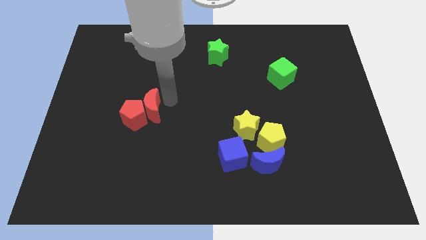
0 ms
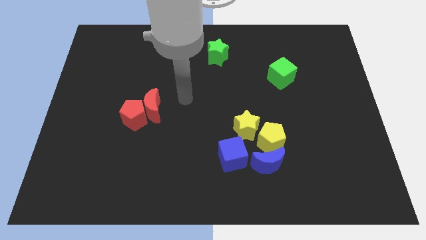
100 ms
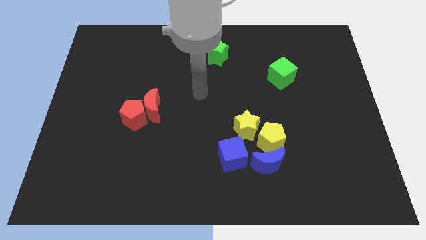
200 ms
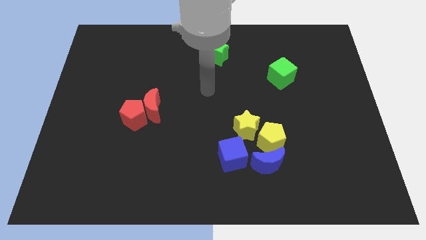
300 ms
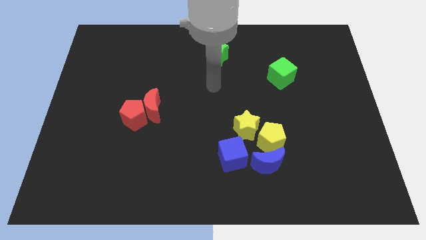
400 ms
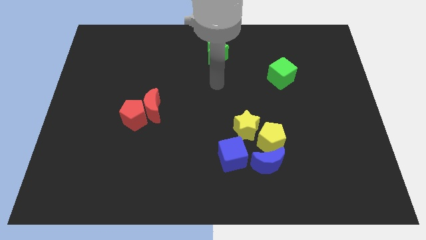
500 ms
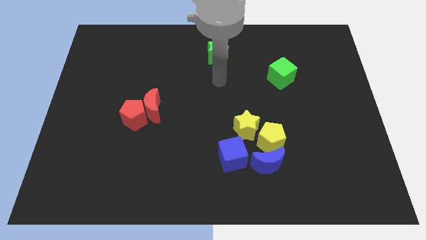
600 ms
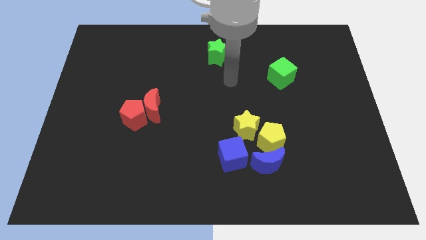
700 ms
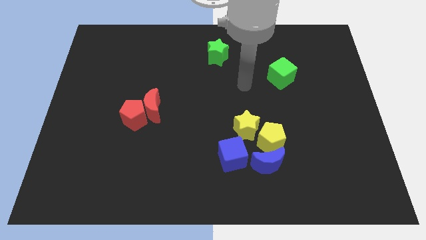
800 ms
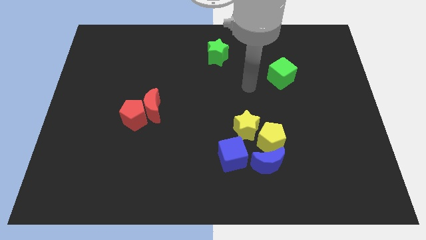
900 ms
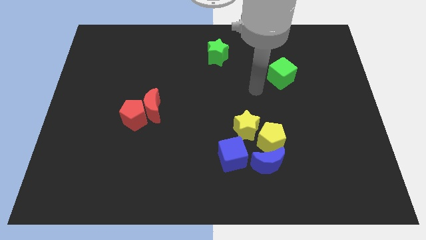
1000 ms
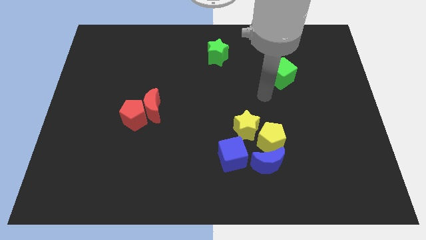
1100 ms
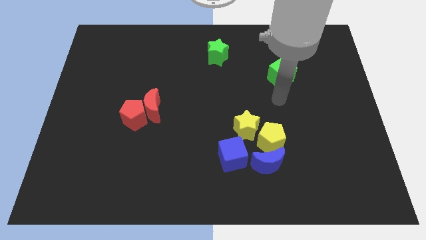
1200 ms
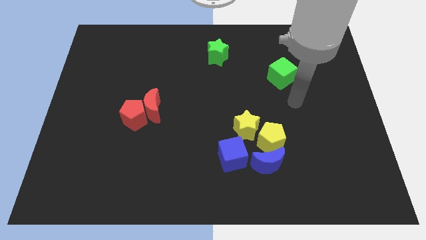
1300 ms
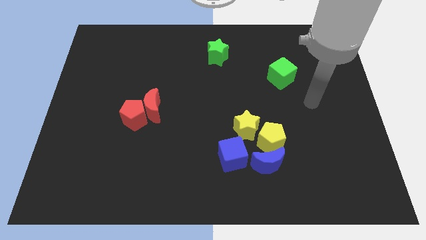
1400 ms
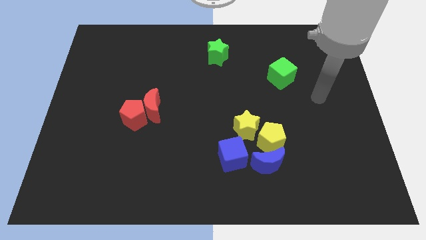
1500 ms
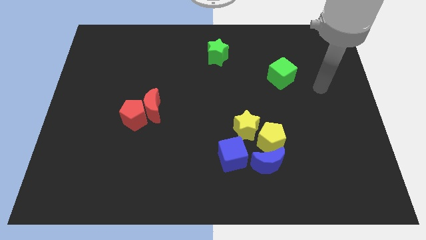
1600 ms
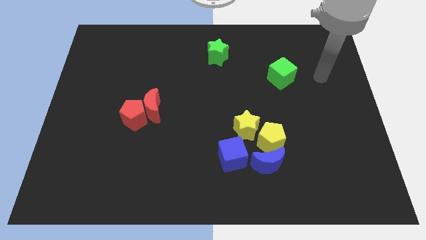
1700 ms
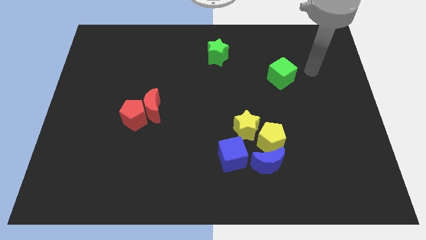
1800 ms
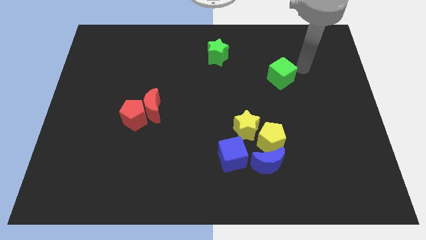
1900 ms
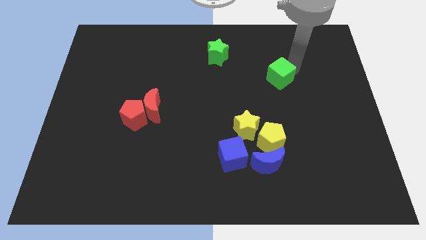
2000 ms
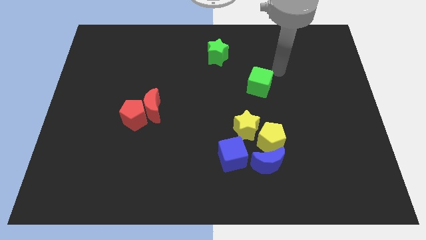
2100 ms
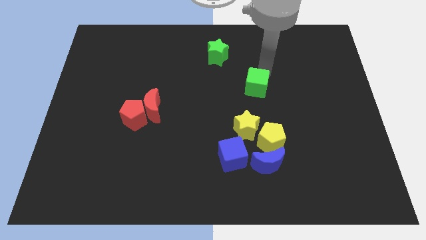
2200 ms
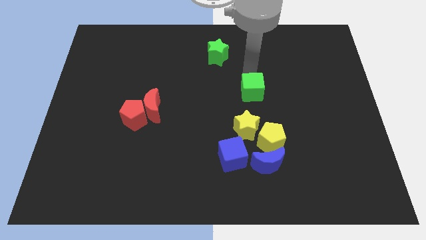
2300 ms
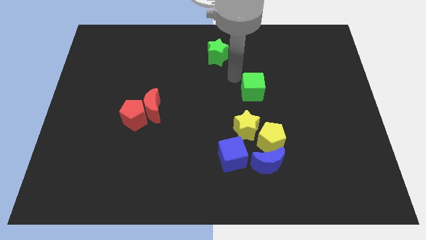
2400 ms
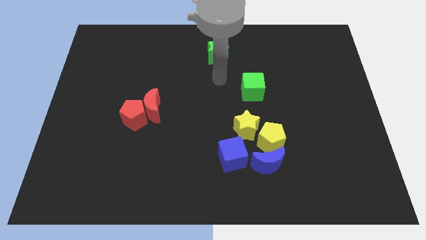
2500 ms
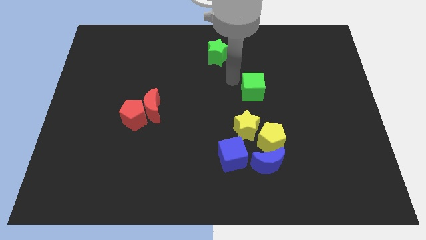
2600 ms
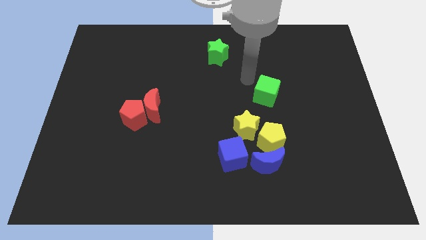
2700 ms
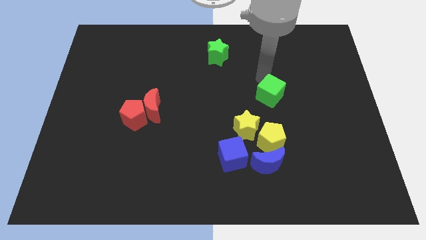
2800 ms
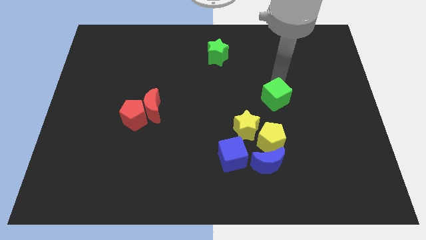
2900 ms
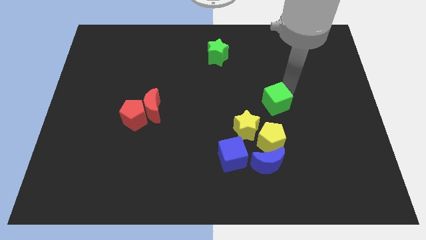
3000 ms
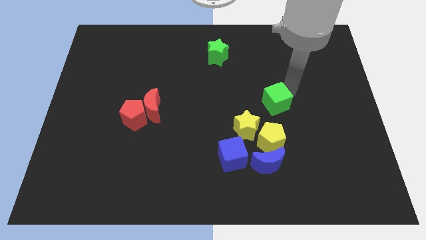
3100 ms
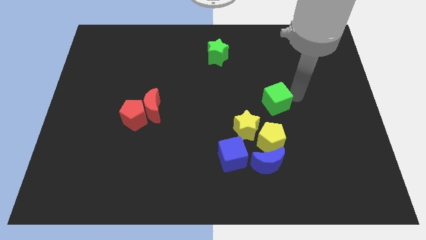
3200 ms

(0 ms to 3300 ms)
push the green cube to the top of the yellow pentagon

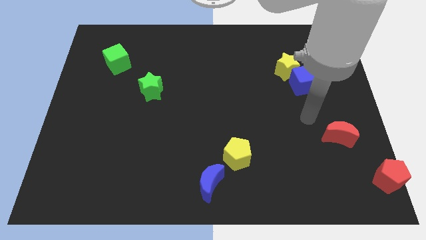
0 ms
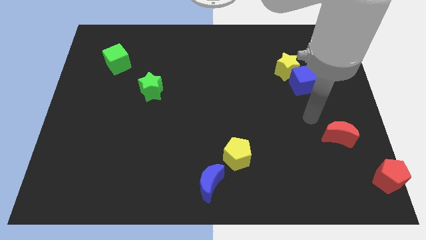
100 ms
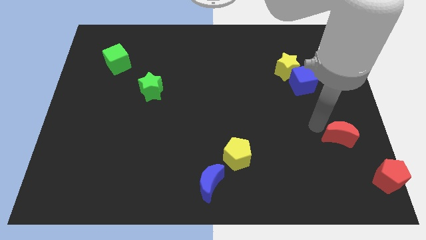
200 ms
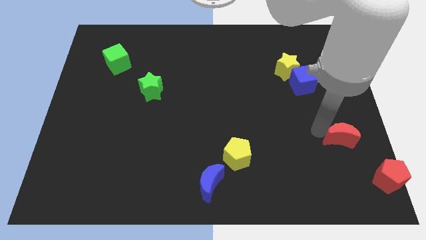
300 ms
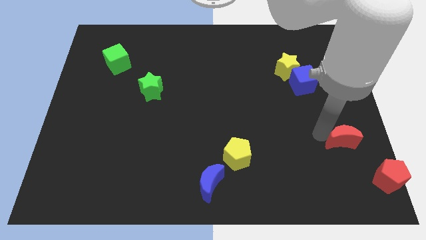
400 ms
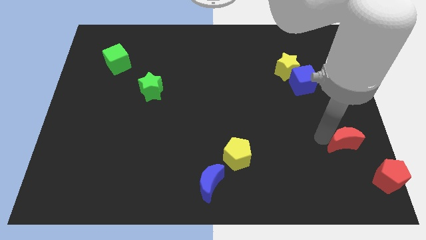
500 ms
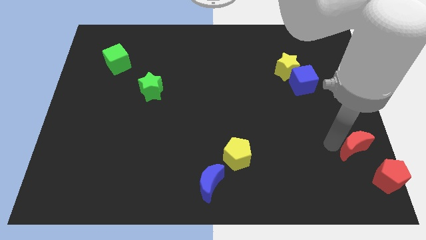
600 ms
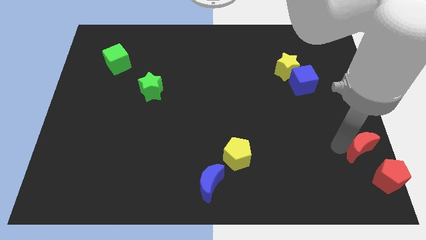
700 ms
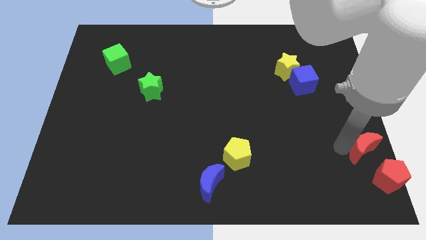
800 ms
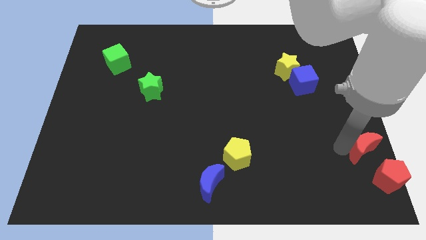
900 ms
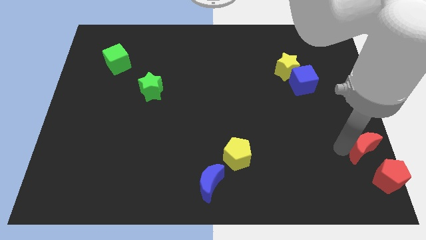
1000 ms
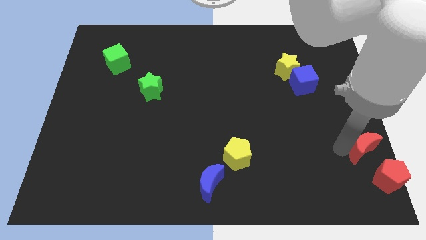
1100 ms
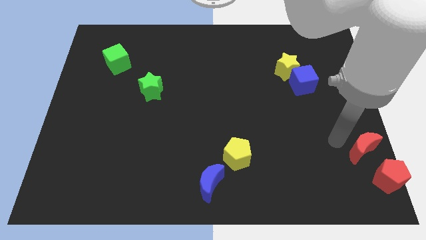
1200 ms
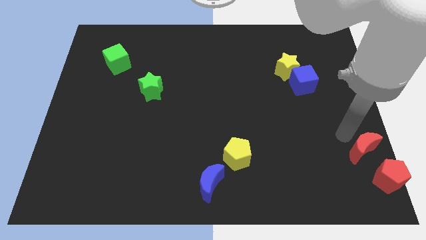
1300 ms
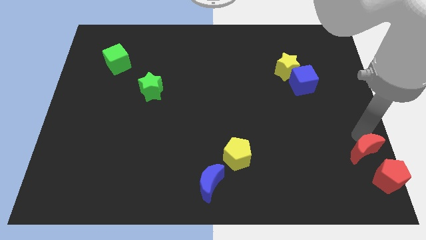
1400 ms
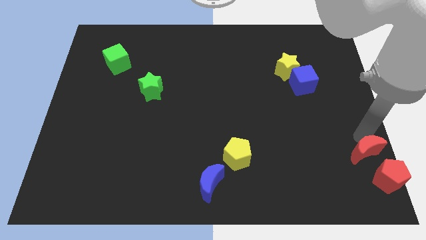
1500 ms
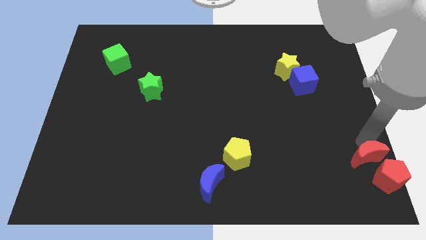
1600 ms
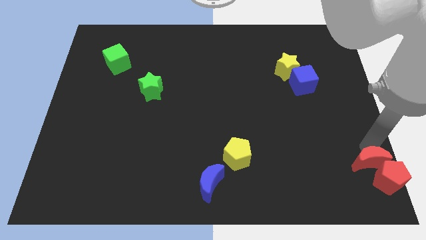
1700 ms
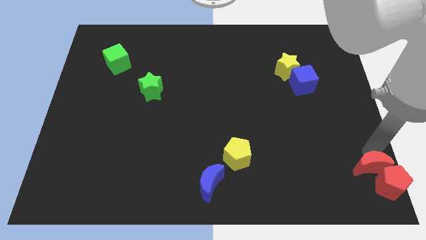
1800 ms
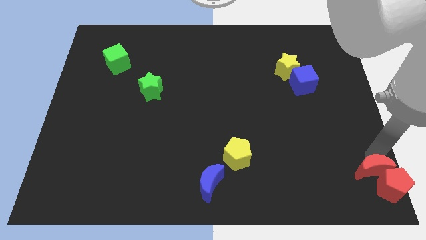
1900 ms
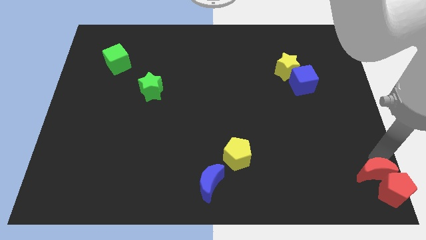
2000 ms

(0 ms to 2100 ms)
push red crescent above red pentagon

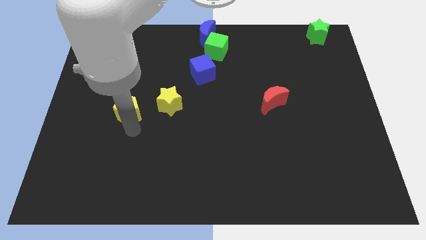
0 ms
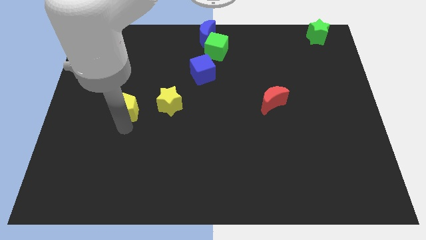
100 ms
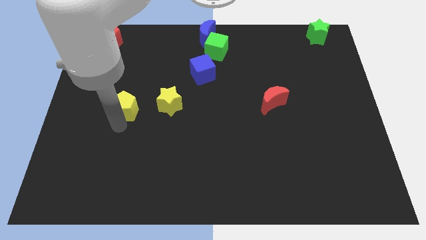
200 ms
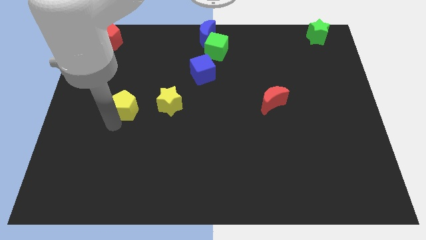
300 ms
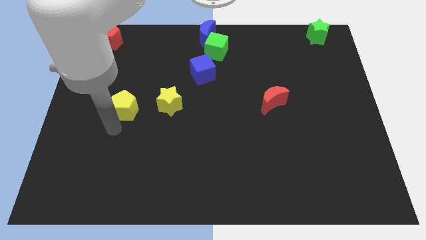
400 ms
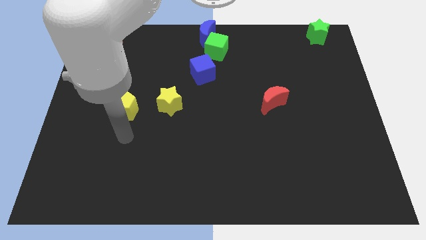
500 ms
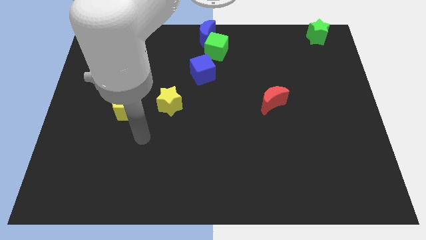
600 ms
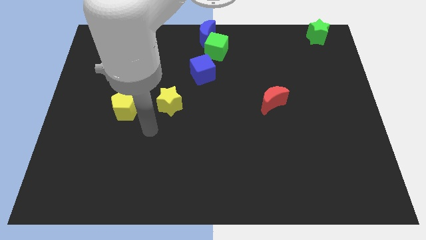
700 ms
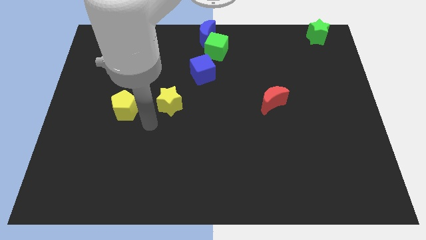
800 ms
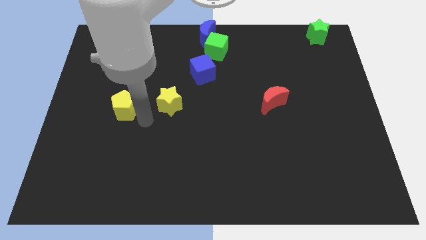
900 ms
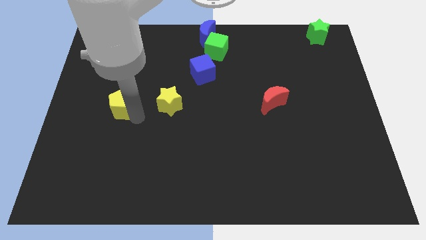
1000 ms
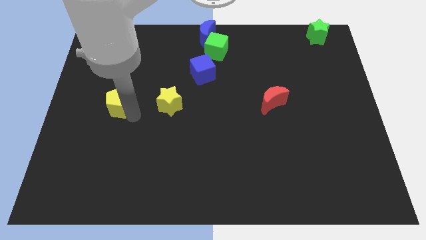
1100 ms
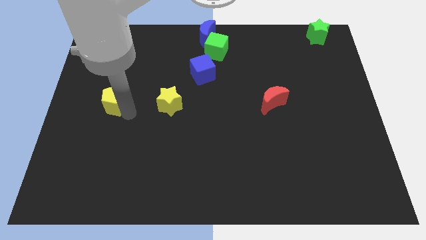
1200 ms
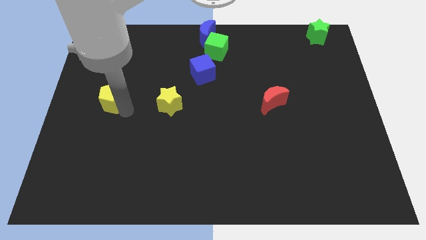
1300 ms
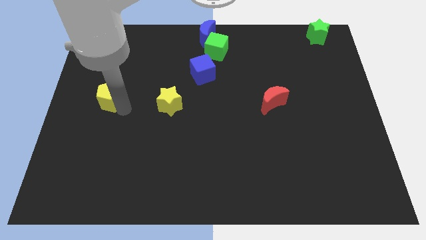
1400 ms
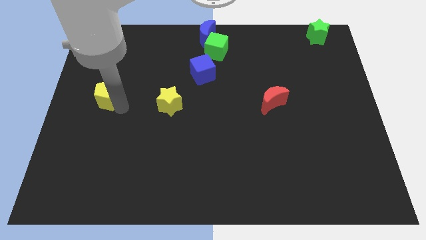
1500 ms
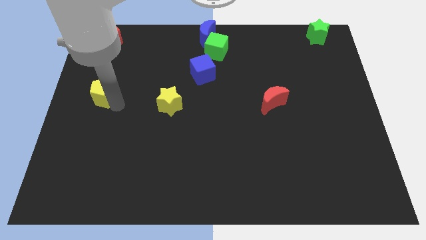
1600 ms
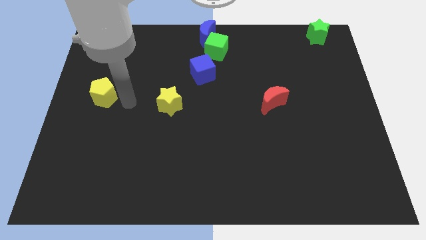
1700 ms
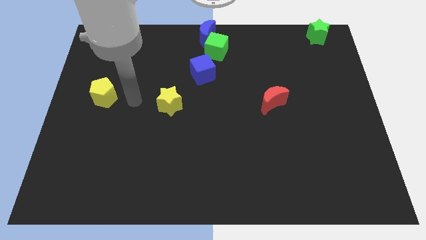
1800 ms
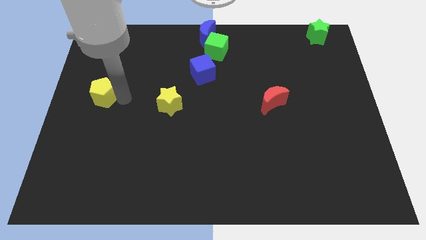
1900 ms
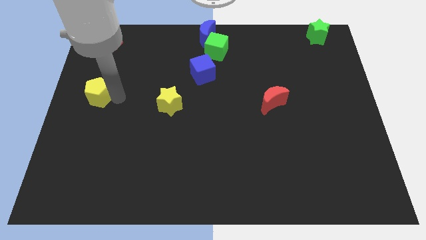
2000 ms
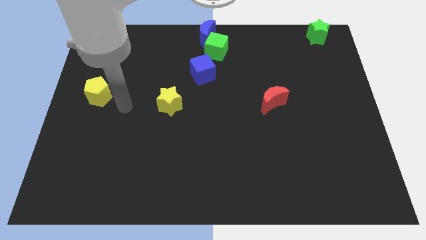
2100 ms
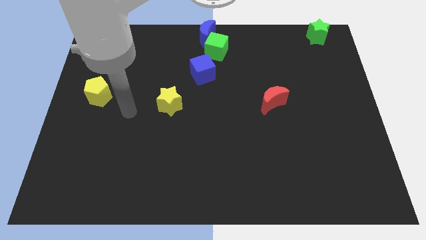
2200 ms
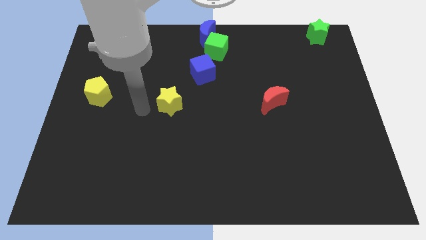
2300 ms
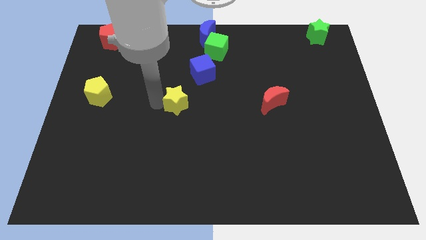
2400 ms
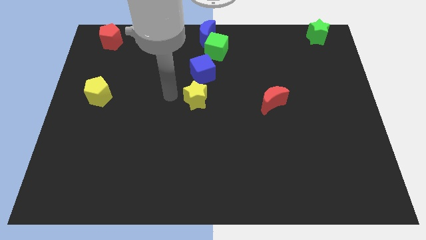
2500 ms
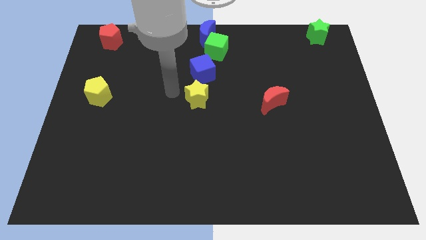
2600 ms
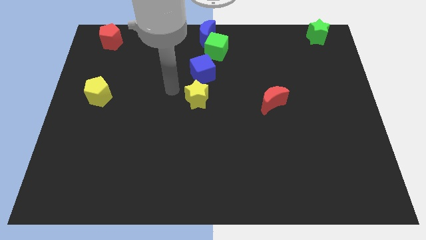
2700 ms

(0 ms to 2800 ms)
move the yellow pentagon slightly left

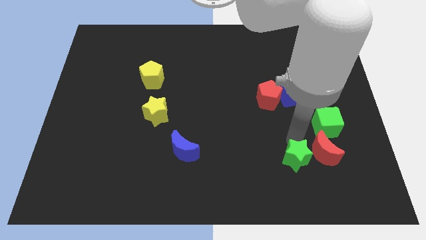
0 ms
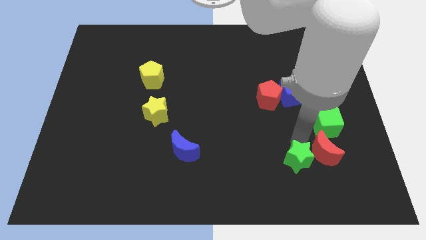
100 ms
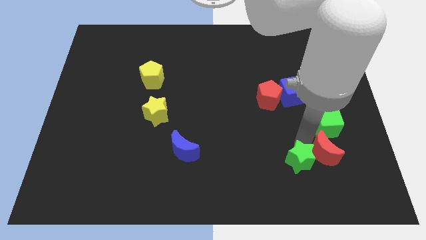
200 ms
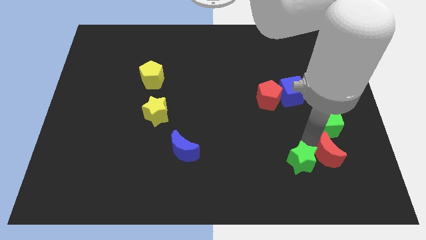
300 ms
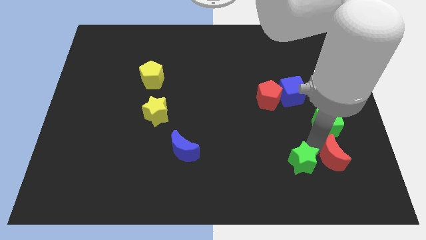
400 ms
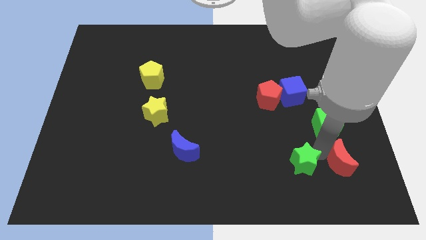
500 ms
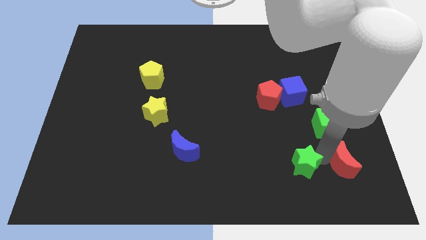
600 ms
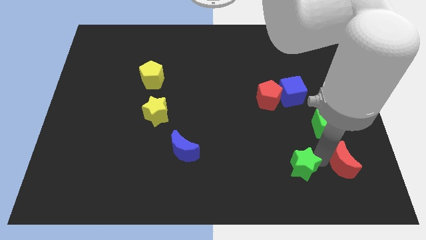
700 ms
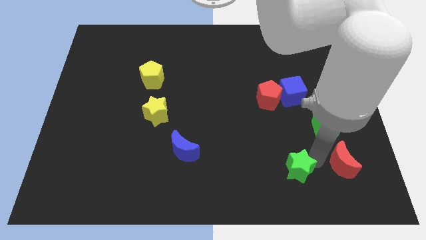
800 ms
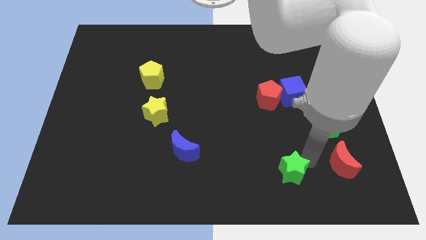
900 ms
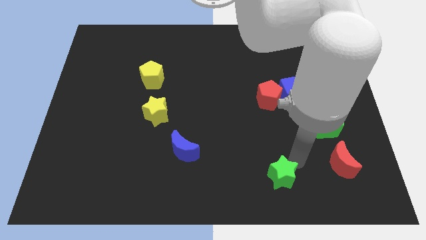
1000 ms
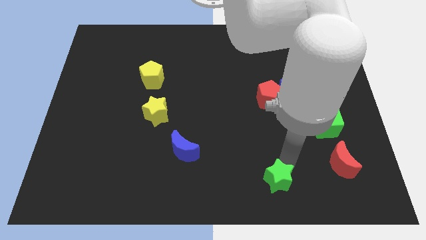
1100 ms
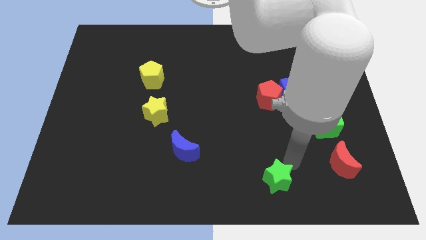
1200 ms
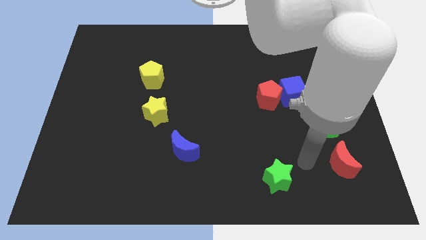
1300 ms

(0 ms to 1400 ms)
put the green star vertically at the bottom side of the red pentagon
